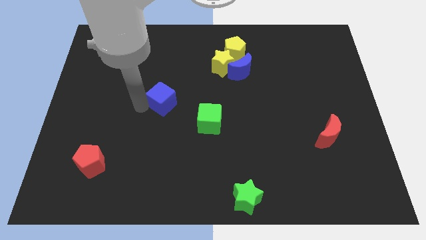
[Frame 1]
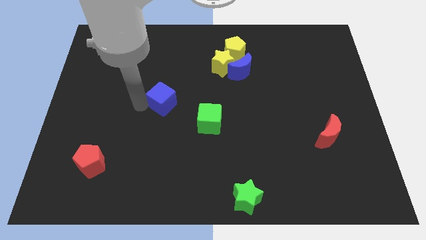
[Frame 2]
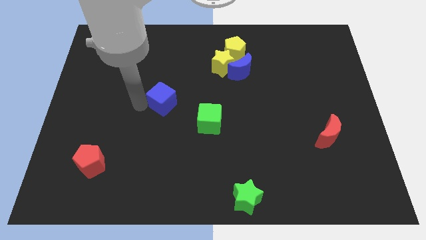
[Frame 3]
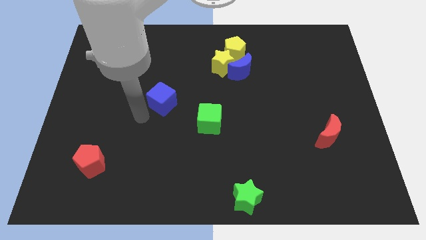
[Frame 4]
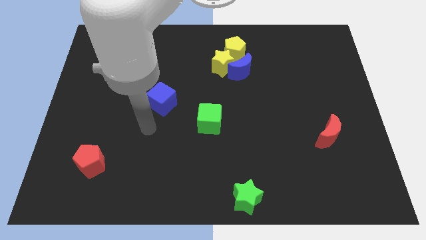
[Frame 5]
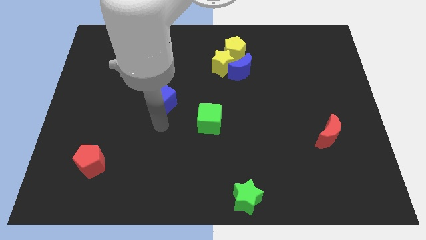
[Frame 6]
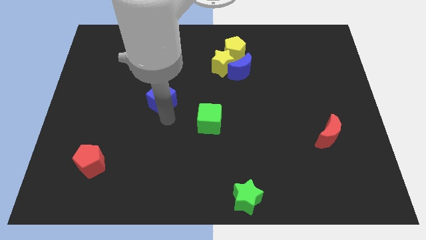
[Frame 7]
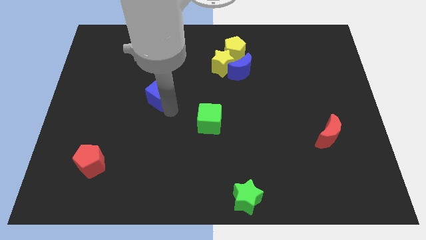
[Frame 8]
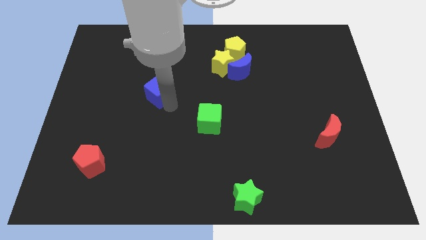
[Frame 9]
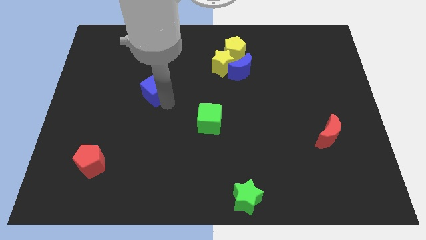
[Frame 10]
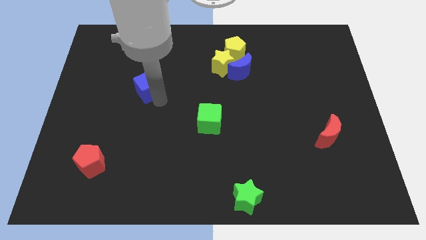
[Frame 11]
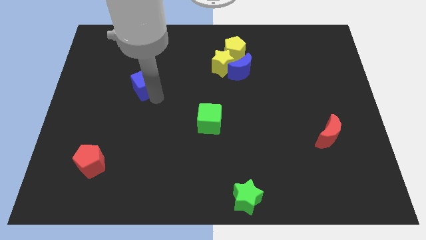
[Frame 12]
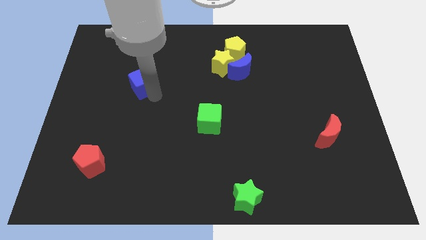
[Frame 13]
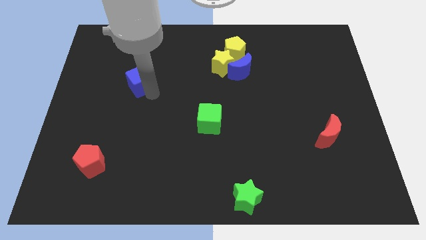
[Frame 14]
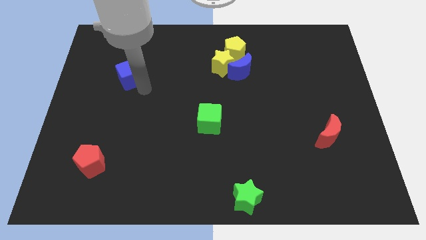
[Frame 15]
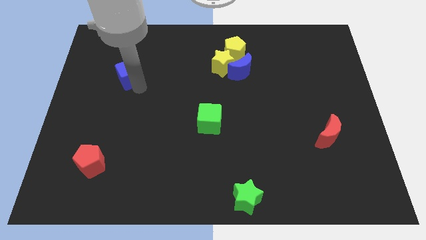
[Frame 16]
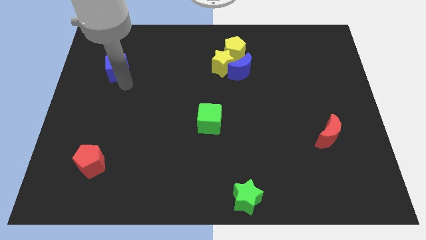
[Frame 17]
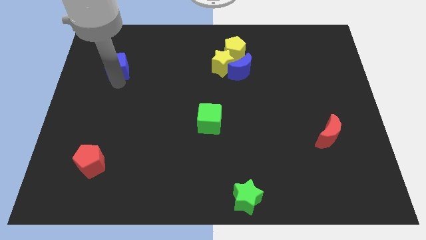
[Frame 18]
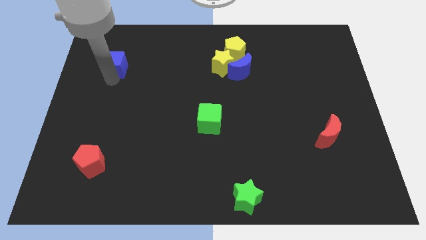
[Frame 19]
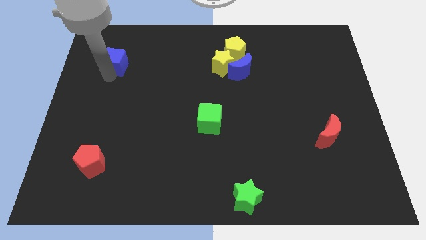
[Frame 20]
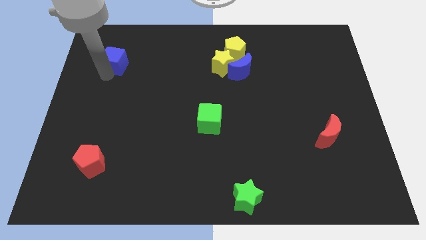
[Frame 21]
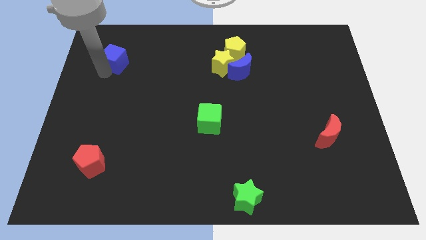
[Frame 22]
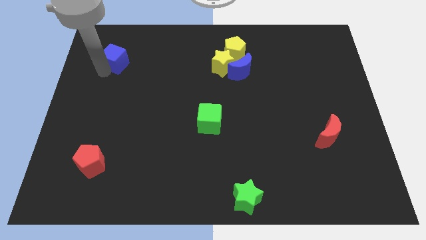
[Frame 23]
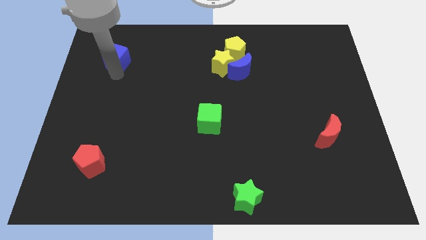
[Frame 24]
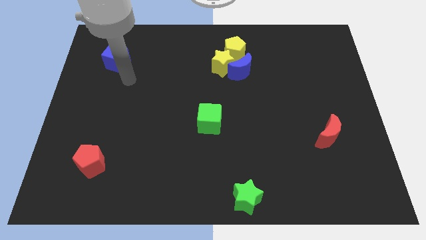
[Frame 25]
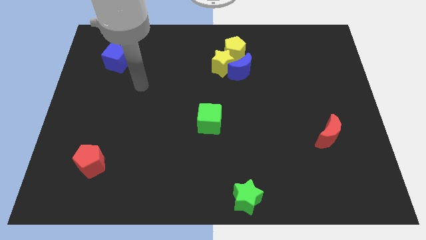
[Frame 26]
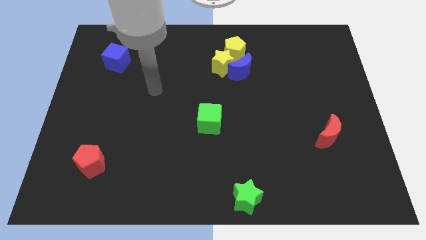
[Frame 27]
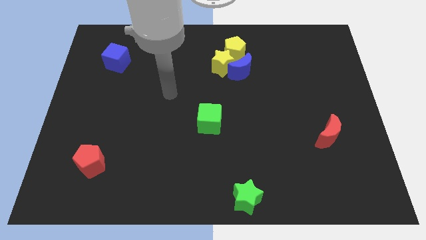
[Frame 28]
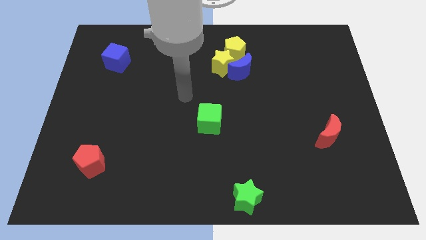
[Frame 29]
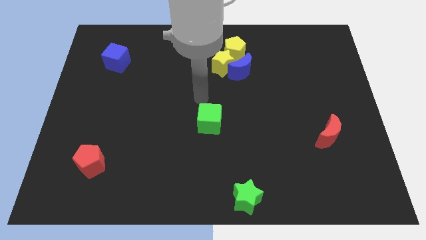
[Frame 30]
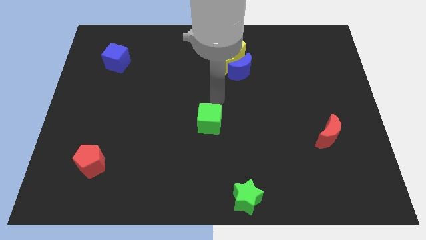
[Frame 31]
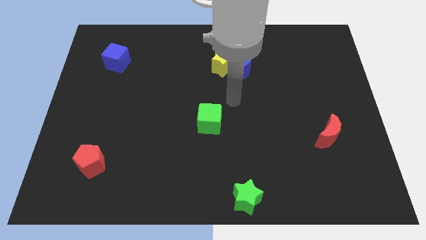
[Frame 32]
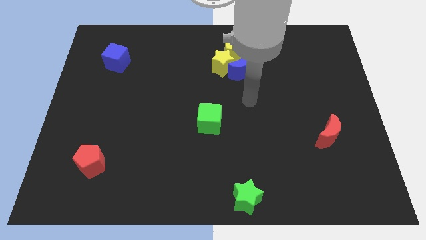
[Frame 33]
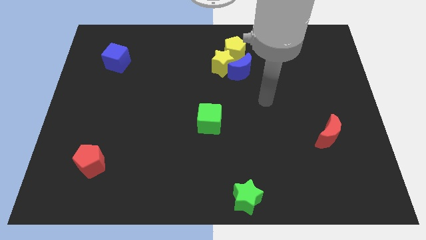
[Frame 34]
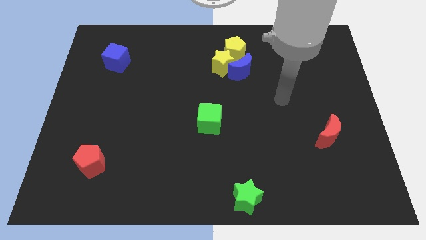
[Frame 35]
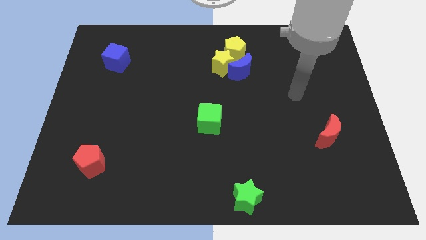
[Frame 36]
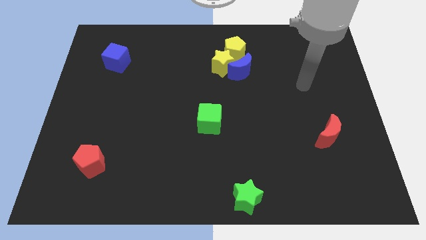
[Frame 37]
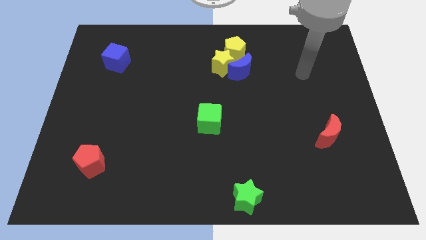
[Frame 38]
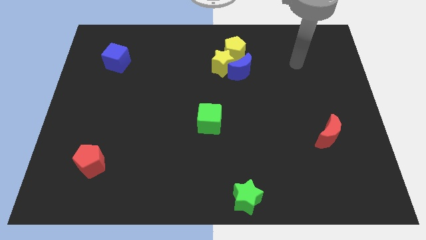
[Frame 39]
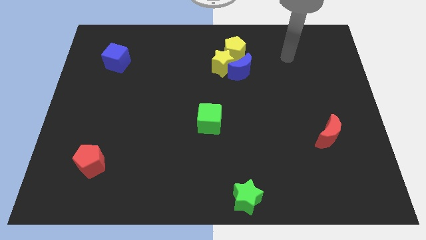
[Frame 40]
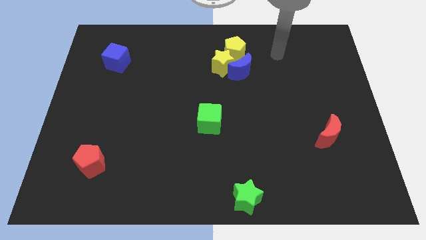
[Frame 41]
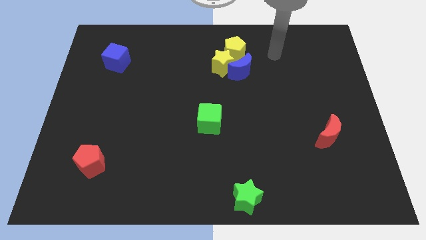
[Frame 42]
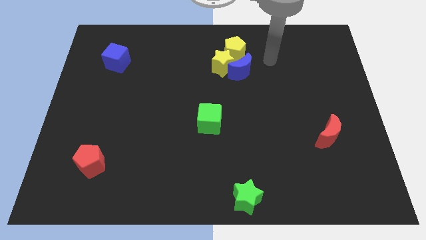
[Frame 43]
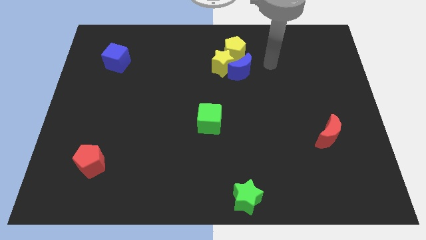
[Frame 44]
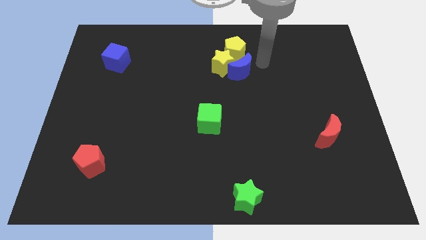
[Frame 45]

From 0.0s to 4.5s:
place the blue cube vertically above the red pentagon

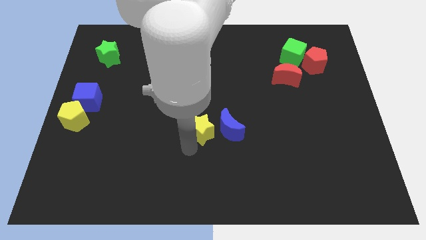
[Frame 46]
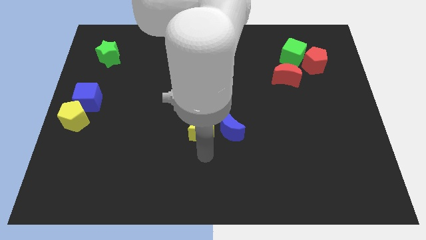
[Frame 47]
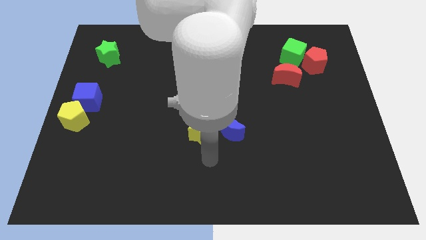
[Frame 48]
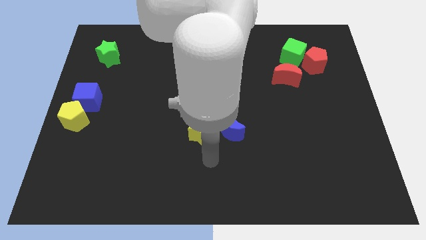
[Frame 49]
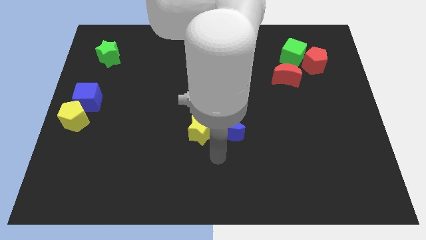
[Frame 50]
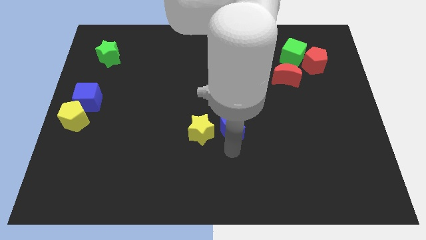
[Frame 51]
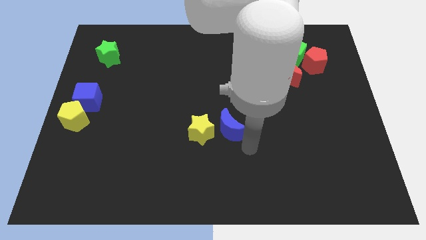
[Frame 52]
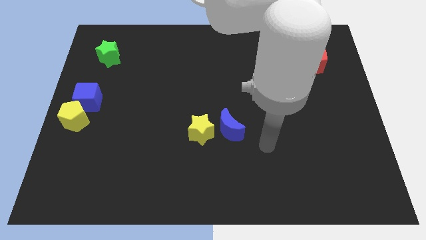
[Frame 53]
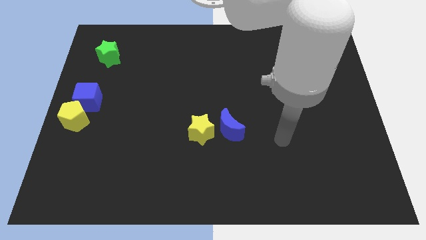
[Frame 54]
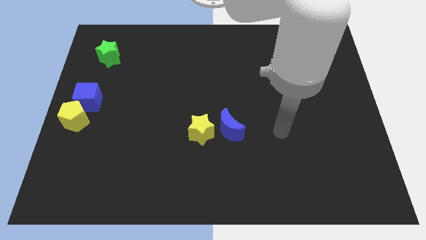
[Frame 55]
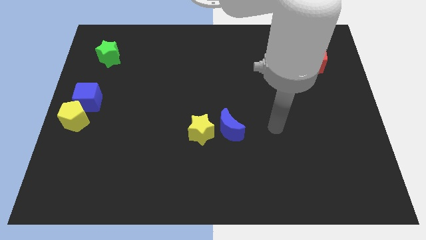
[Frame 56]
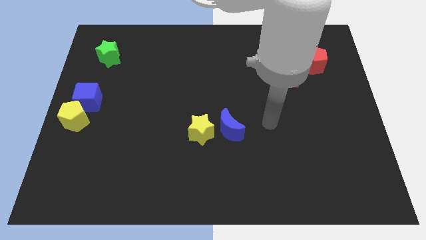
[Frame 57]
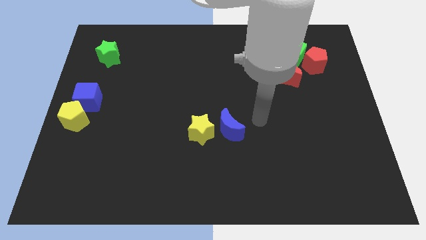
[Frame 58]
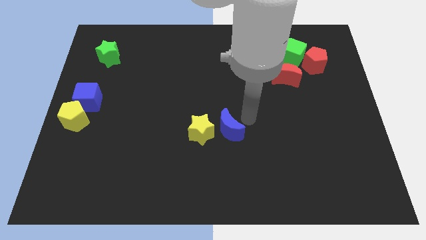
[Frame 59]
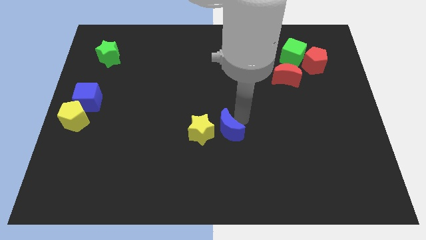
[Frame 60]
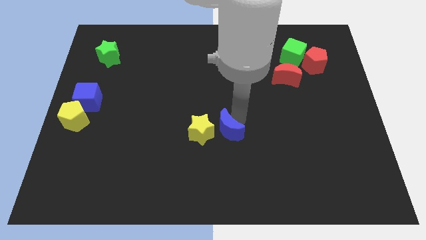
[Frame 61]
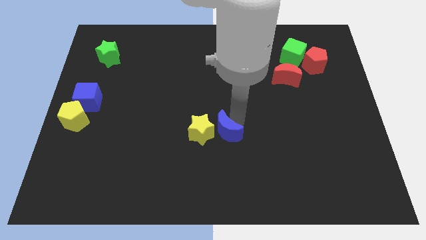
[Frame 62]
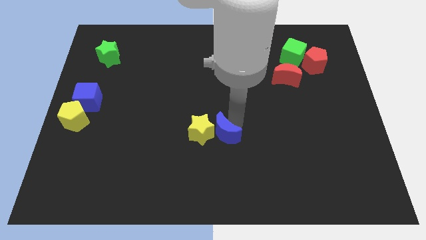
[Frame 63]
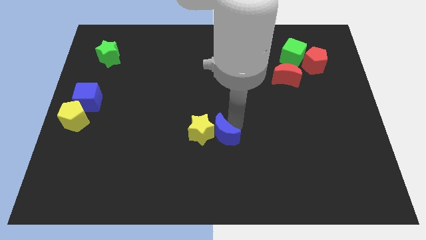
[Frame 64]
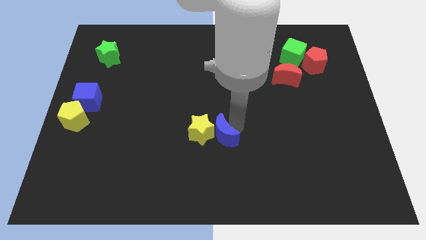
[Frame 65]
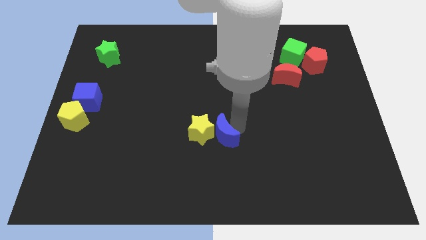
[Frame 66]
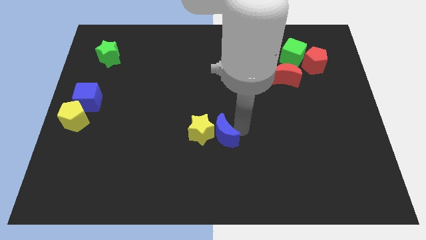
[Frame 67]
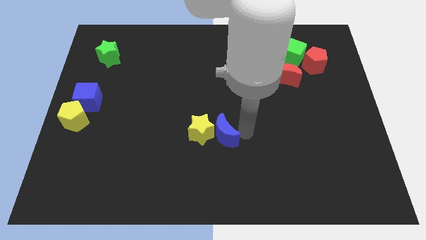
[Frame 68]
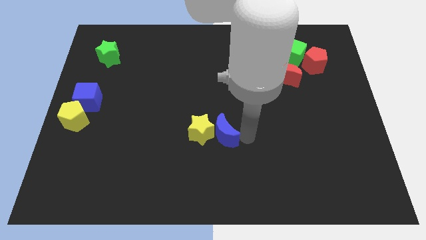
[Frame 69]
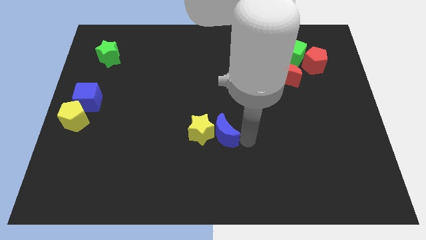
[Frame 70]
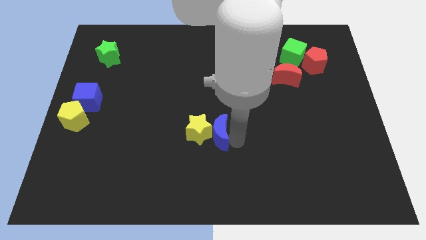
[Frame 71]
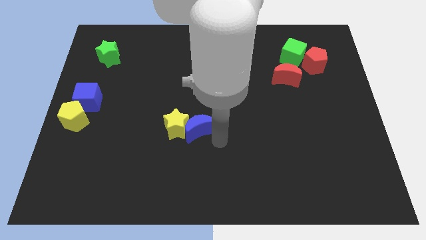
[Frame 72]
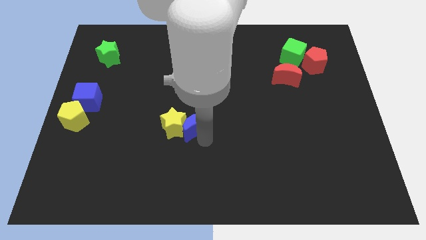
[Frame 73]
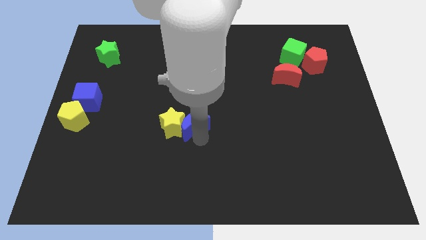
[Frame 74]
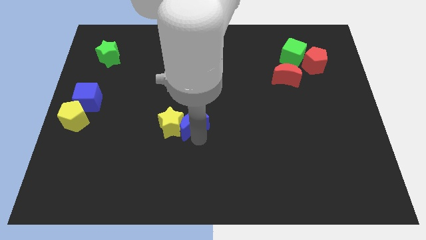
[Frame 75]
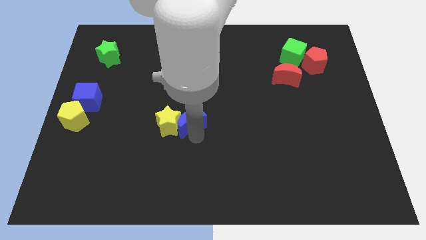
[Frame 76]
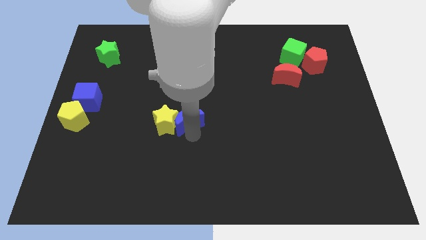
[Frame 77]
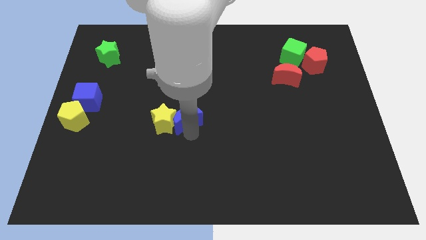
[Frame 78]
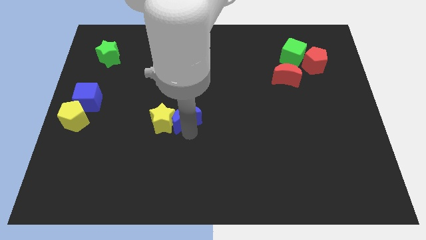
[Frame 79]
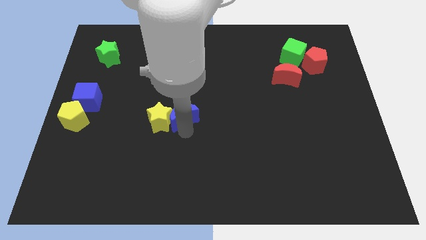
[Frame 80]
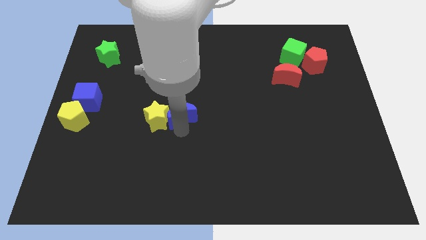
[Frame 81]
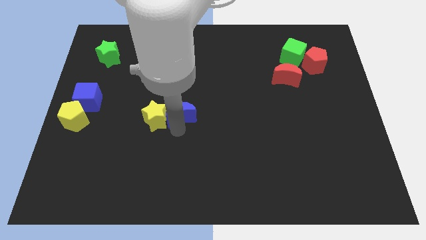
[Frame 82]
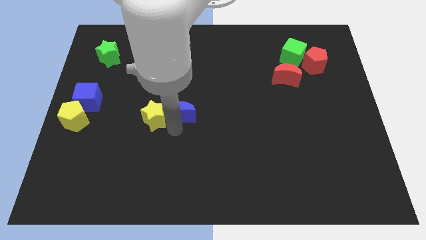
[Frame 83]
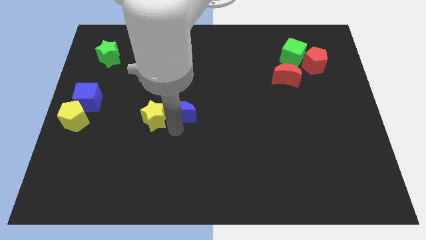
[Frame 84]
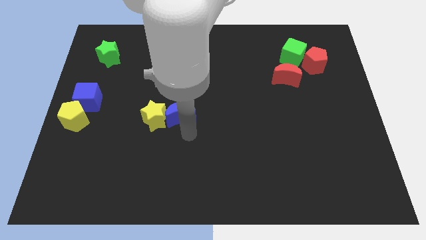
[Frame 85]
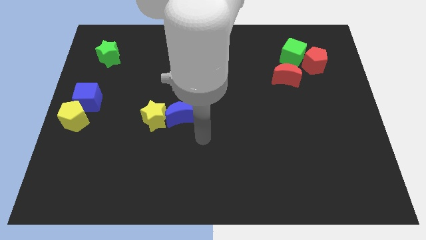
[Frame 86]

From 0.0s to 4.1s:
place the yellow star and blue moon parallel to yellow pentagon

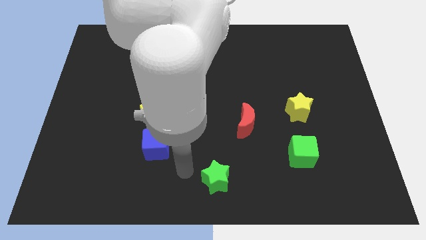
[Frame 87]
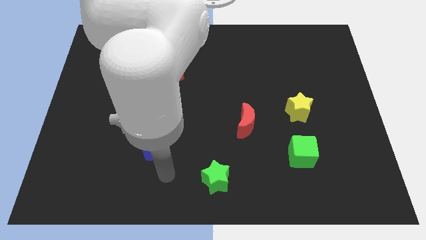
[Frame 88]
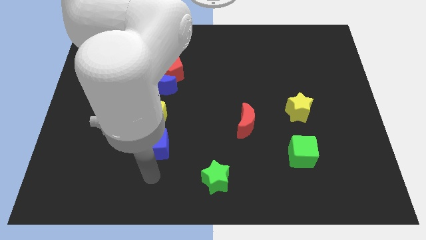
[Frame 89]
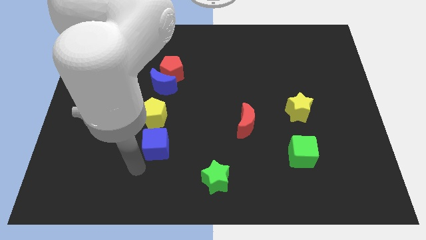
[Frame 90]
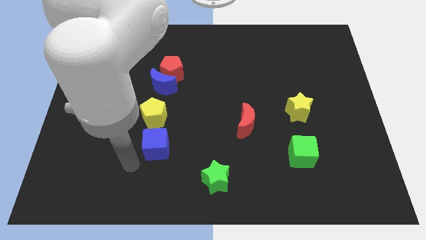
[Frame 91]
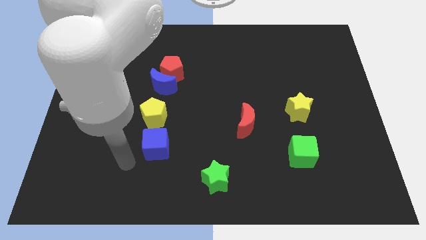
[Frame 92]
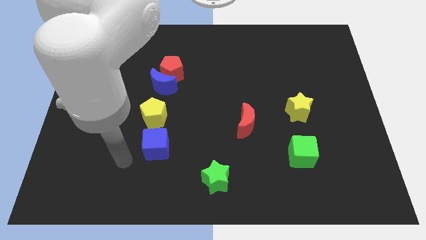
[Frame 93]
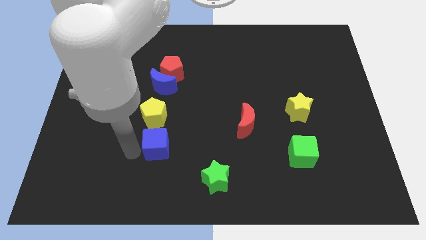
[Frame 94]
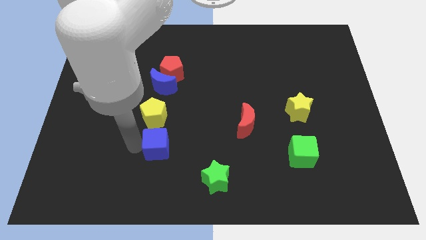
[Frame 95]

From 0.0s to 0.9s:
touch the left side of the blue cube
